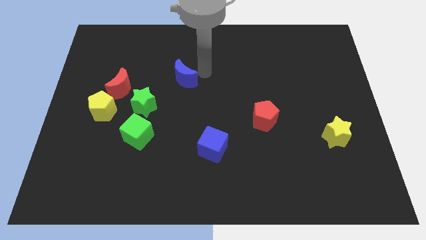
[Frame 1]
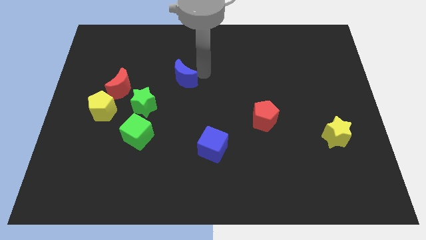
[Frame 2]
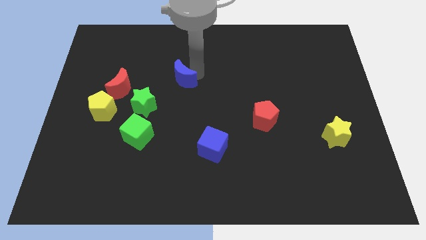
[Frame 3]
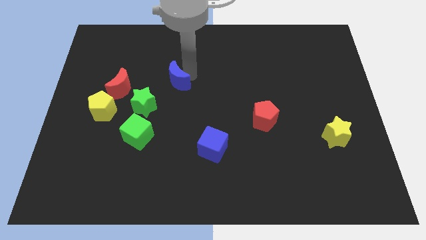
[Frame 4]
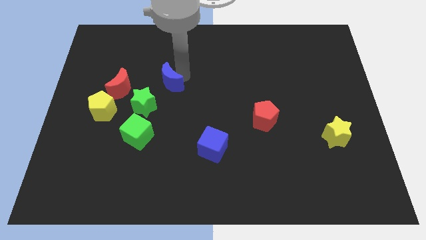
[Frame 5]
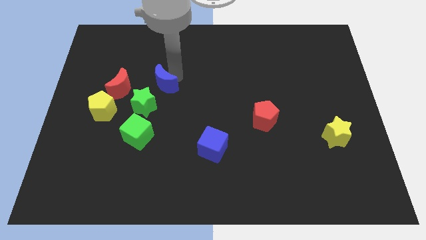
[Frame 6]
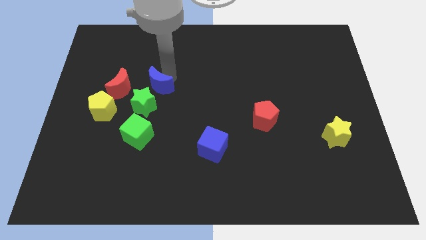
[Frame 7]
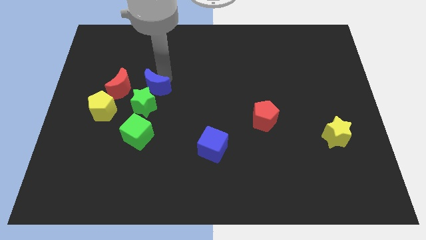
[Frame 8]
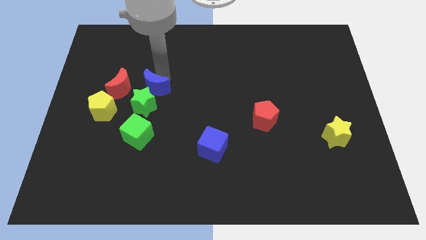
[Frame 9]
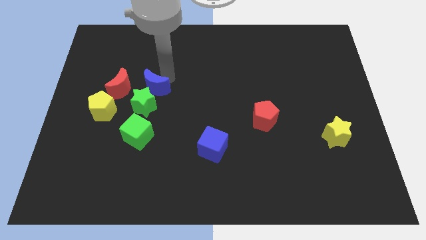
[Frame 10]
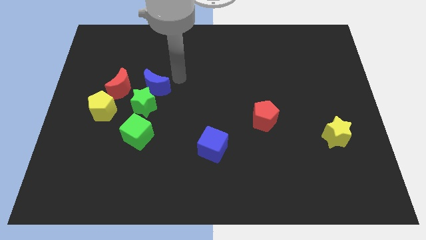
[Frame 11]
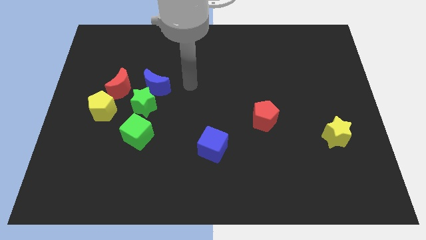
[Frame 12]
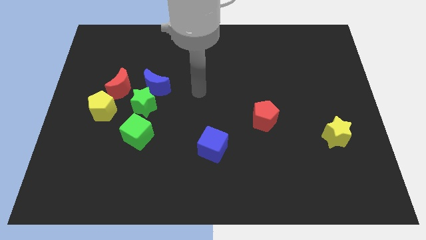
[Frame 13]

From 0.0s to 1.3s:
put the blue crescent close to the green star

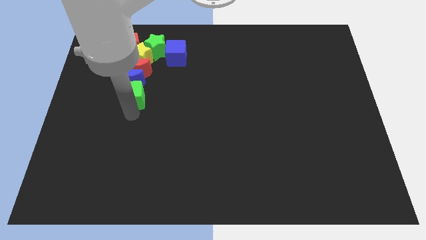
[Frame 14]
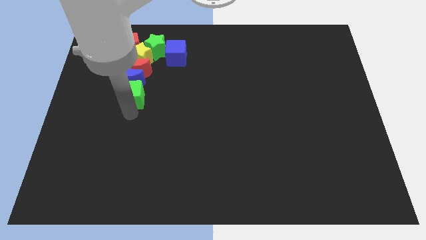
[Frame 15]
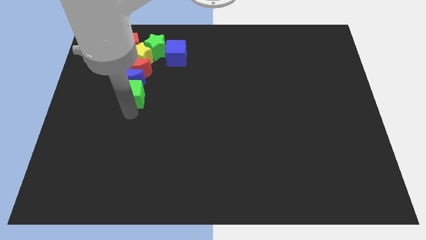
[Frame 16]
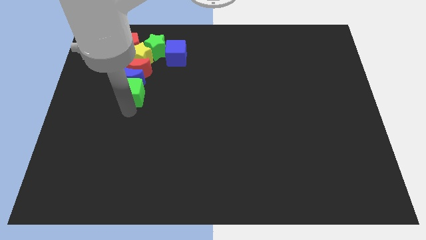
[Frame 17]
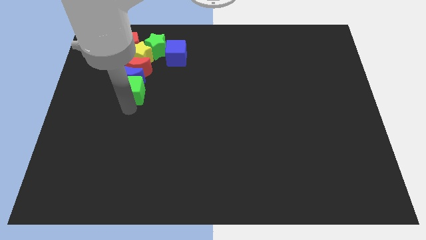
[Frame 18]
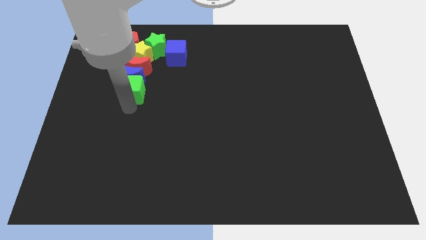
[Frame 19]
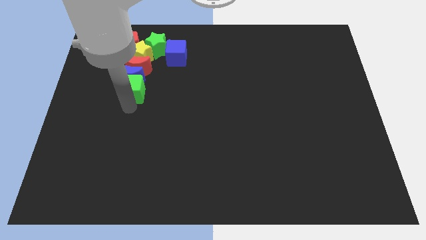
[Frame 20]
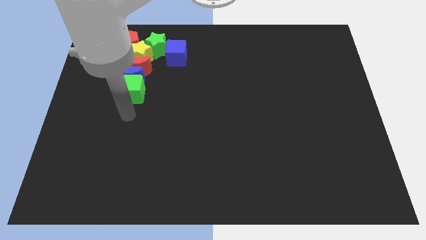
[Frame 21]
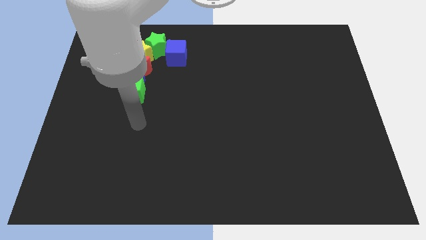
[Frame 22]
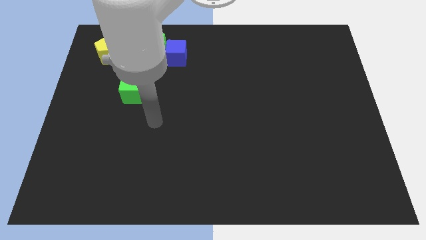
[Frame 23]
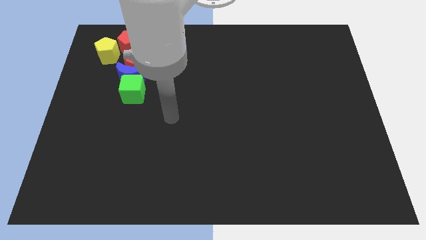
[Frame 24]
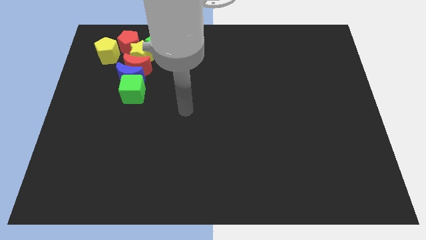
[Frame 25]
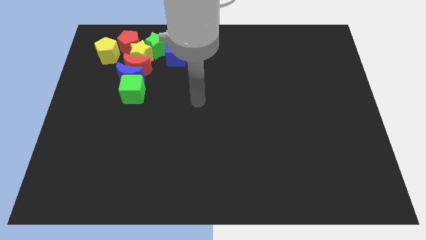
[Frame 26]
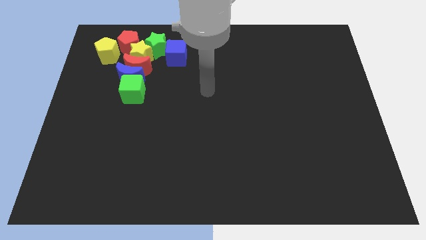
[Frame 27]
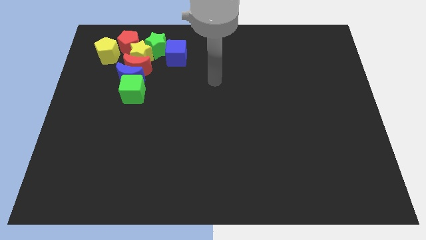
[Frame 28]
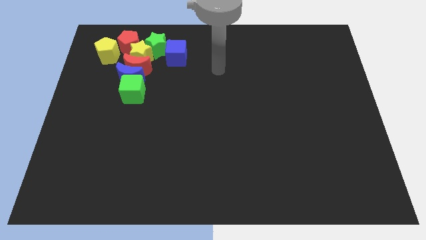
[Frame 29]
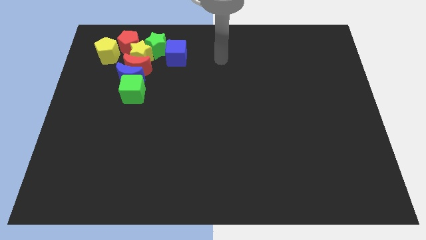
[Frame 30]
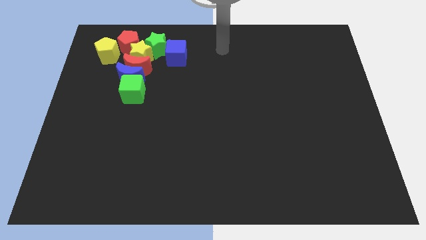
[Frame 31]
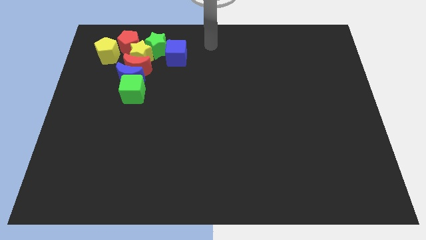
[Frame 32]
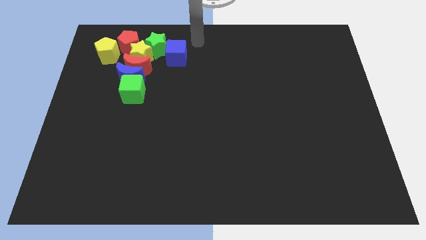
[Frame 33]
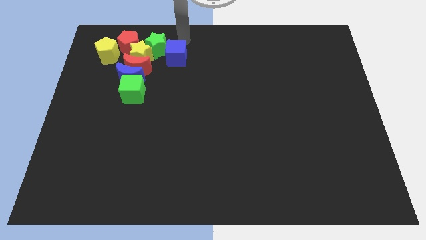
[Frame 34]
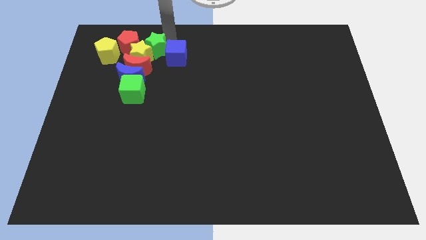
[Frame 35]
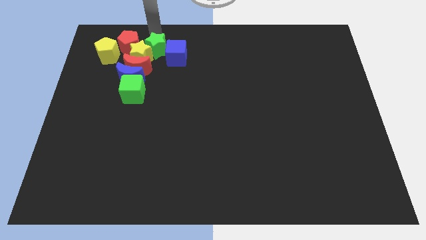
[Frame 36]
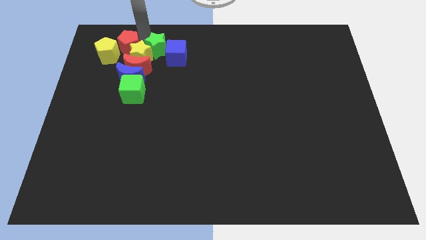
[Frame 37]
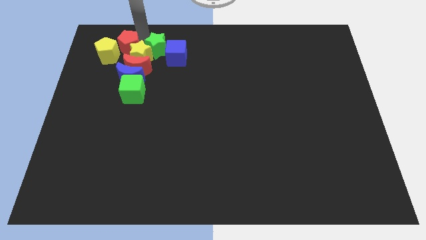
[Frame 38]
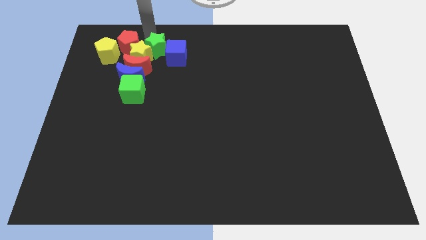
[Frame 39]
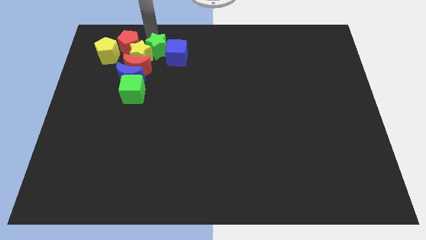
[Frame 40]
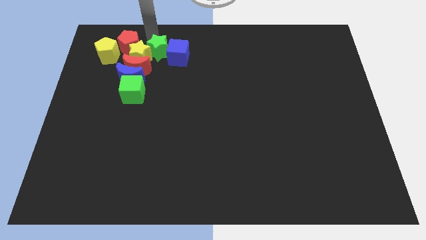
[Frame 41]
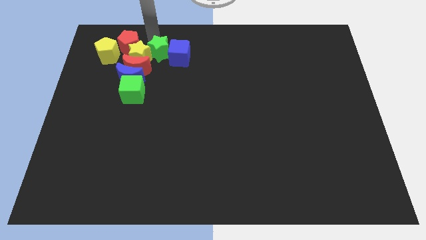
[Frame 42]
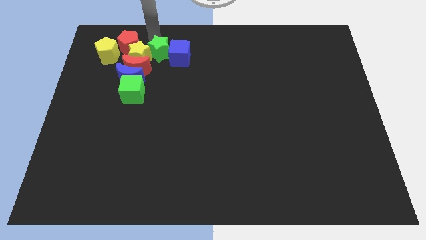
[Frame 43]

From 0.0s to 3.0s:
move your arm to the top of the green star

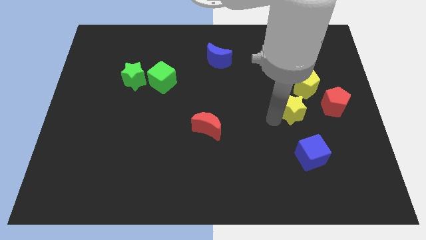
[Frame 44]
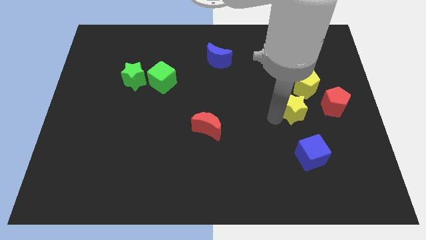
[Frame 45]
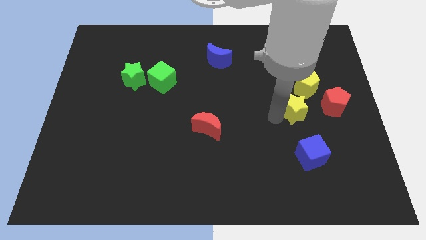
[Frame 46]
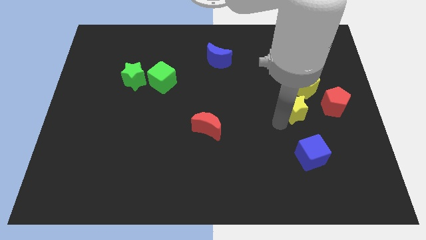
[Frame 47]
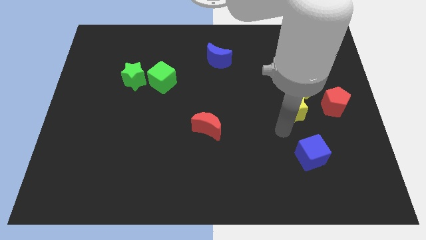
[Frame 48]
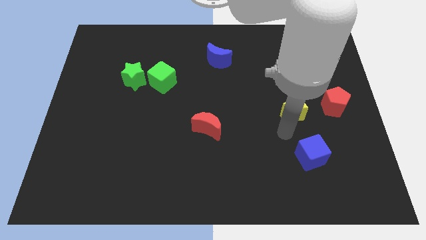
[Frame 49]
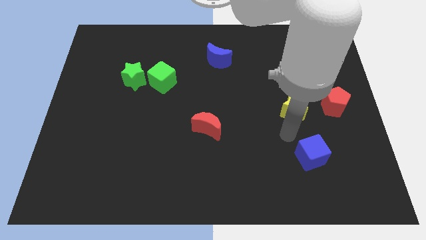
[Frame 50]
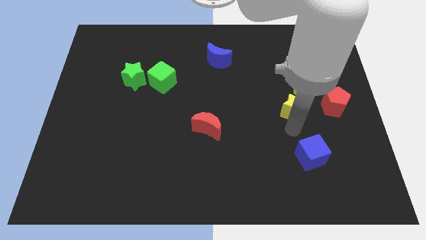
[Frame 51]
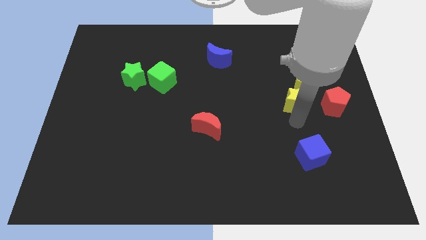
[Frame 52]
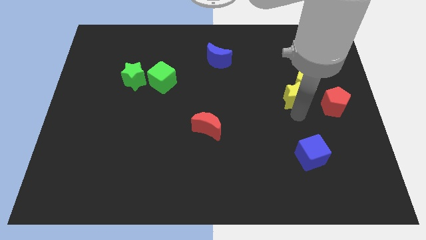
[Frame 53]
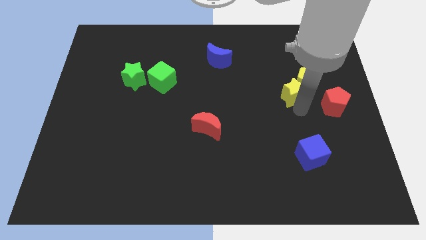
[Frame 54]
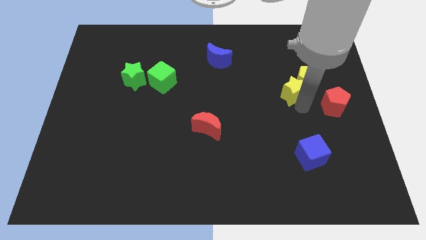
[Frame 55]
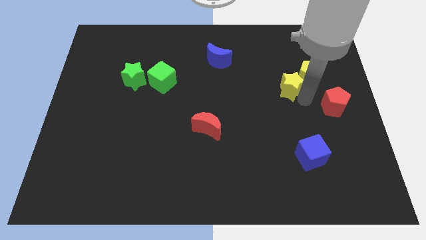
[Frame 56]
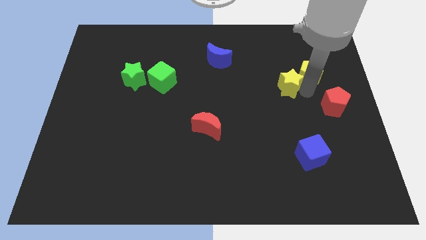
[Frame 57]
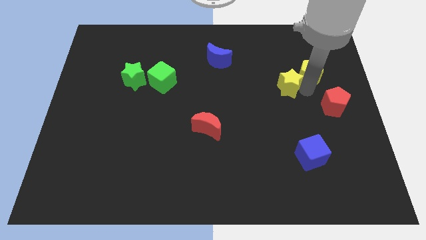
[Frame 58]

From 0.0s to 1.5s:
move yellow star into yellow pentagon

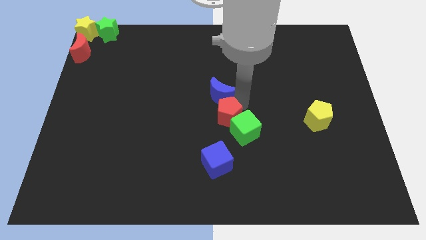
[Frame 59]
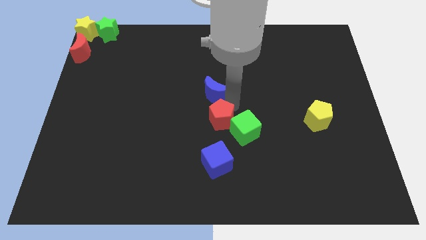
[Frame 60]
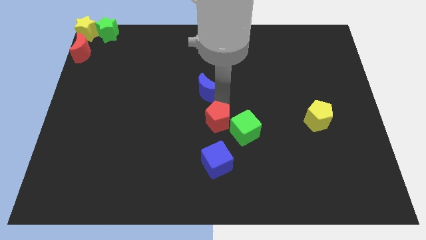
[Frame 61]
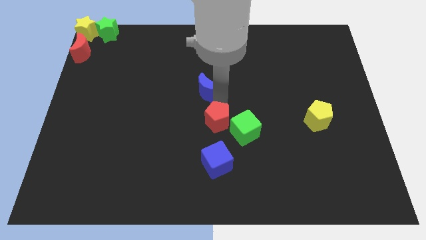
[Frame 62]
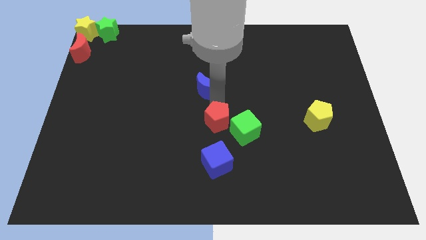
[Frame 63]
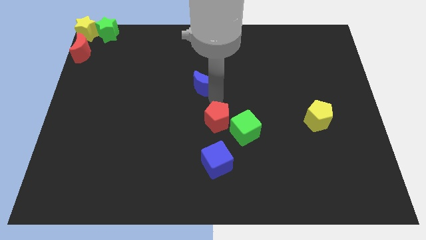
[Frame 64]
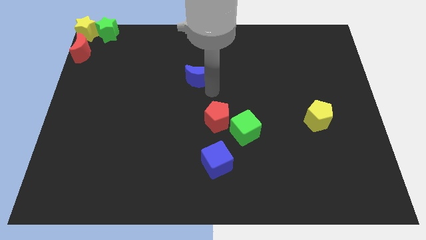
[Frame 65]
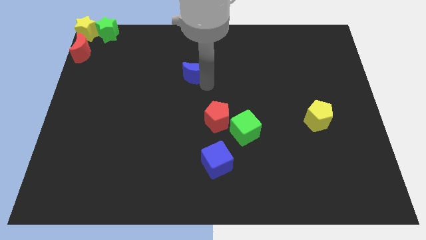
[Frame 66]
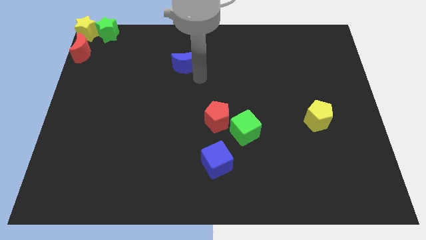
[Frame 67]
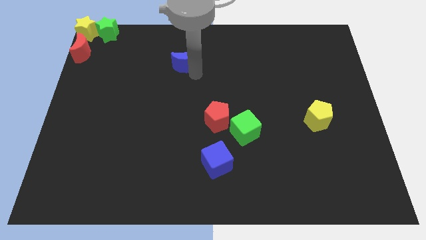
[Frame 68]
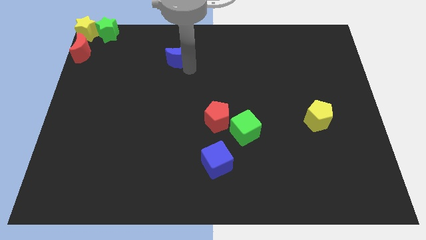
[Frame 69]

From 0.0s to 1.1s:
separate the red pentagon and blue moon

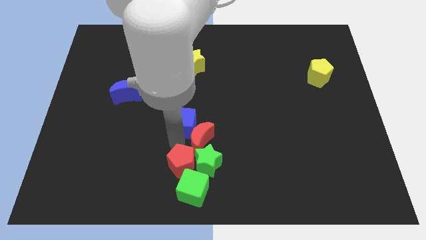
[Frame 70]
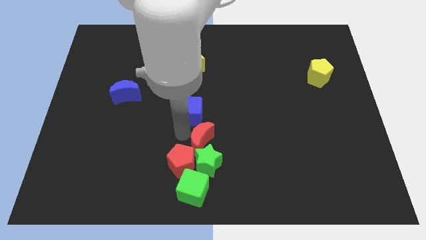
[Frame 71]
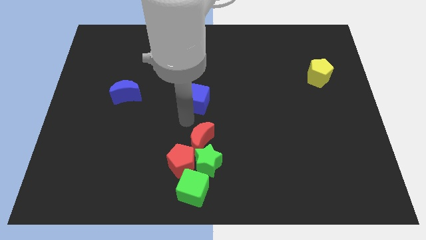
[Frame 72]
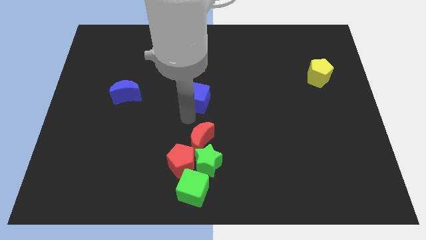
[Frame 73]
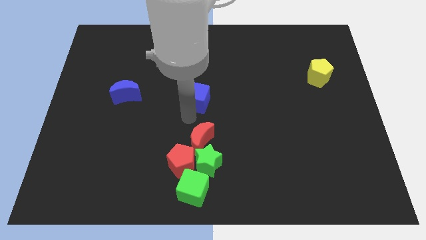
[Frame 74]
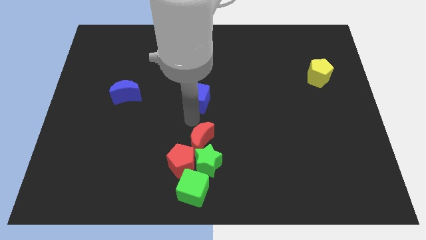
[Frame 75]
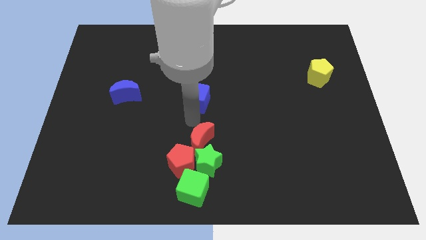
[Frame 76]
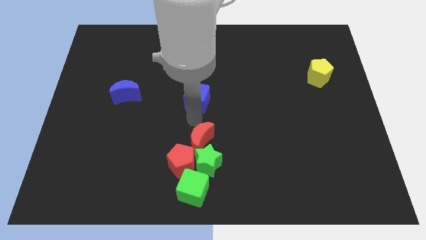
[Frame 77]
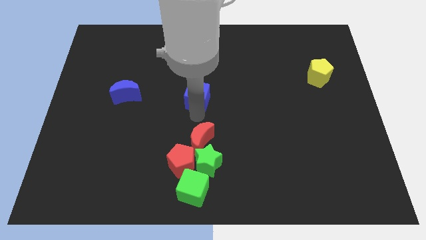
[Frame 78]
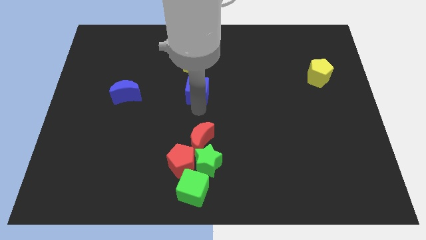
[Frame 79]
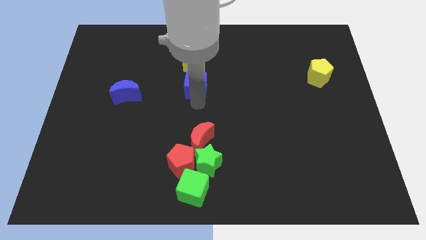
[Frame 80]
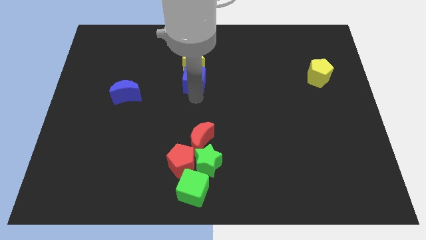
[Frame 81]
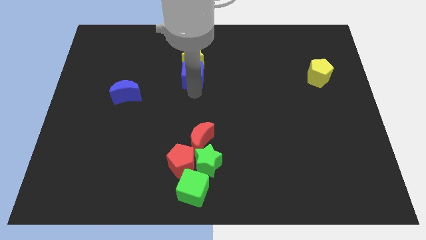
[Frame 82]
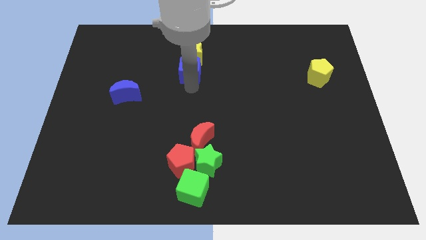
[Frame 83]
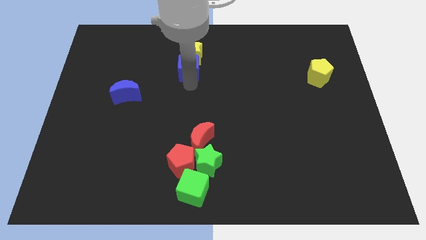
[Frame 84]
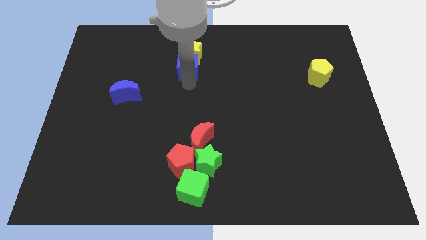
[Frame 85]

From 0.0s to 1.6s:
push the blue cube to the bottom of the yellow star

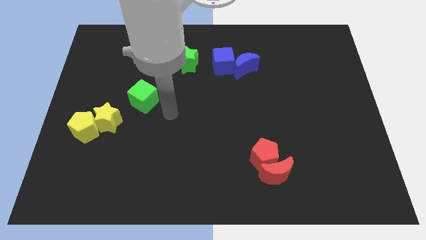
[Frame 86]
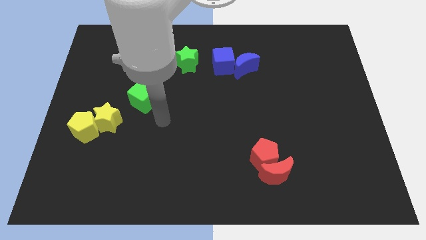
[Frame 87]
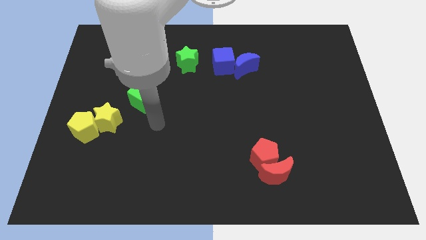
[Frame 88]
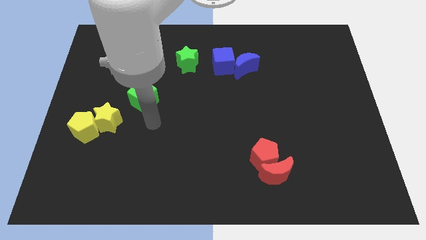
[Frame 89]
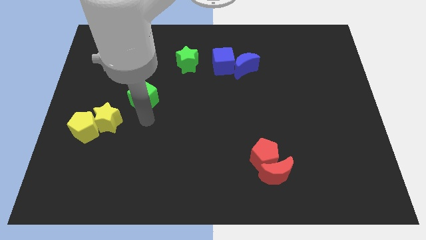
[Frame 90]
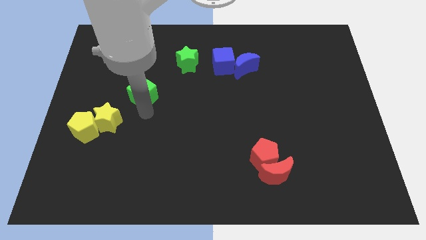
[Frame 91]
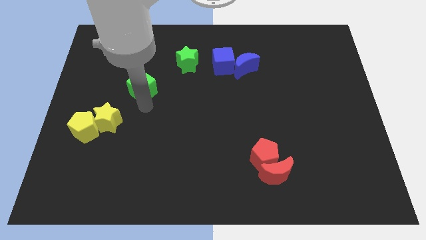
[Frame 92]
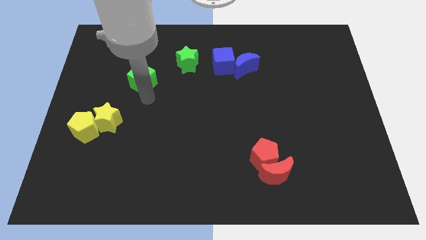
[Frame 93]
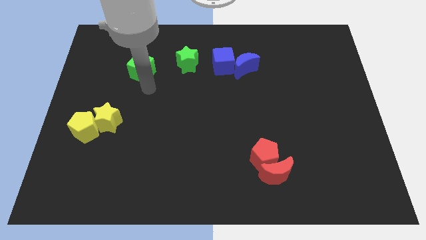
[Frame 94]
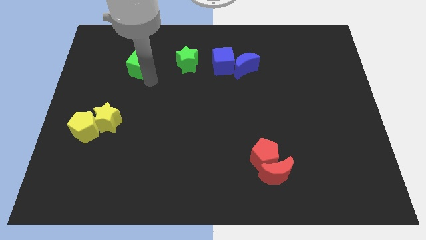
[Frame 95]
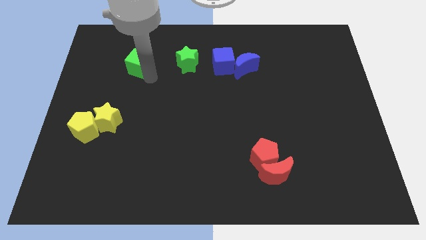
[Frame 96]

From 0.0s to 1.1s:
push green cube beside green star
